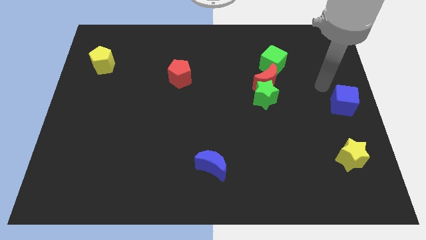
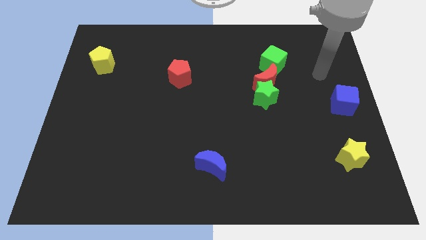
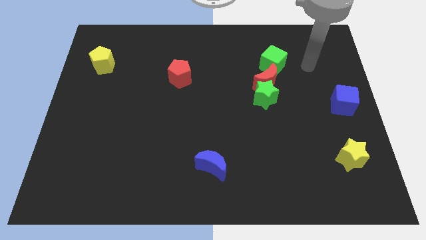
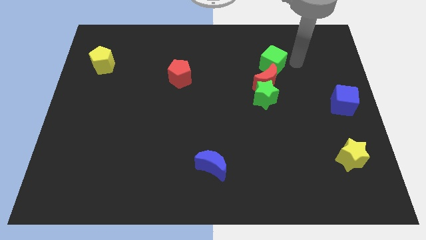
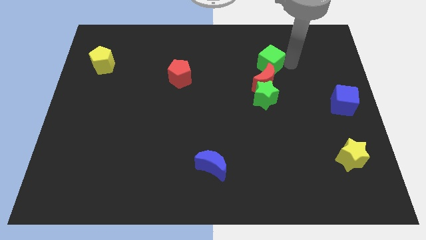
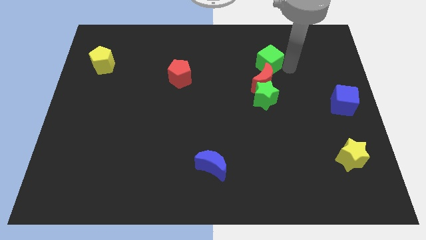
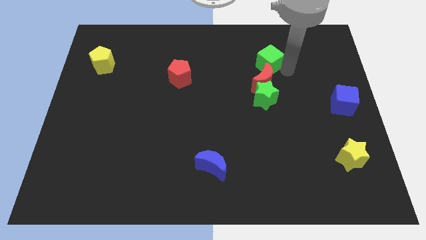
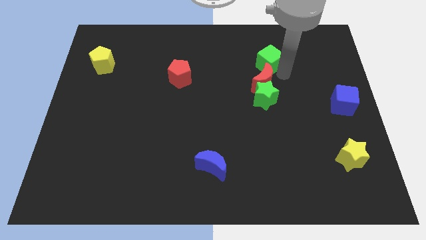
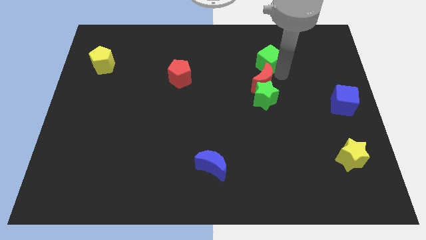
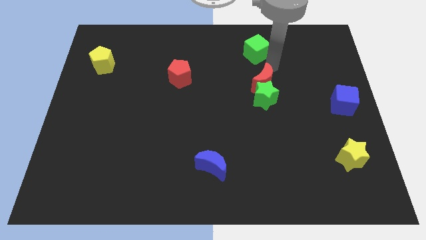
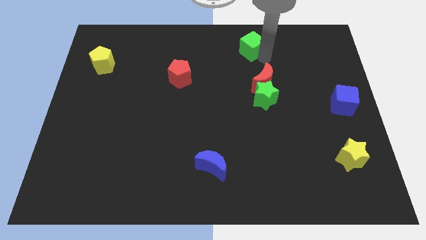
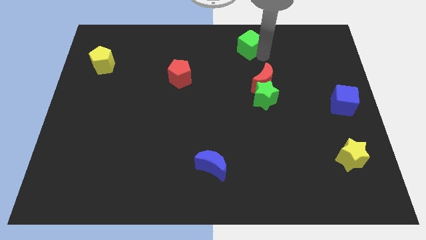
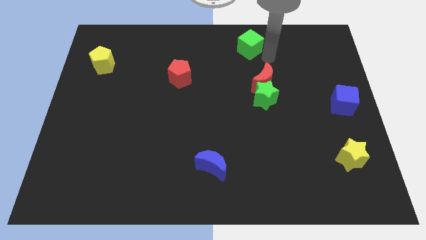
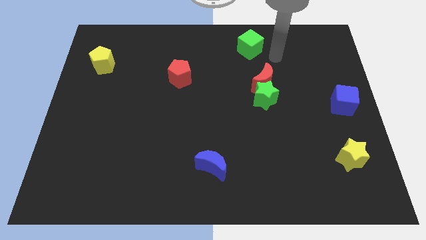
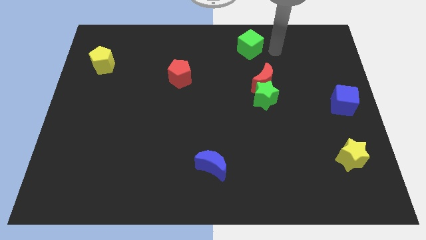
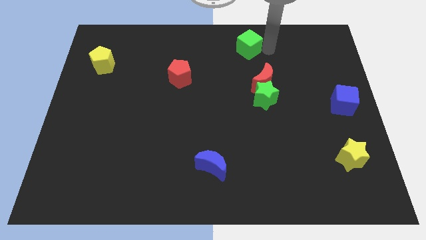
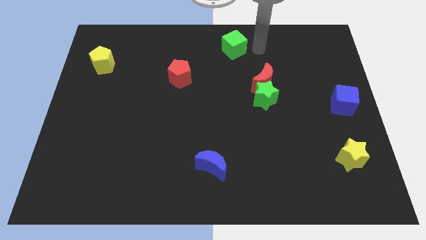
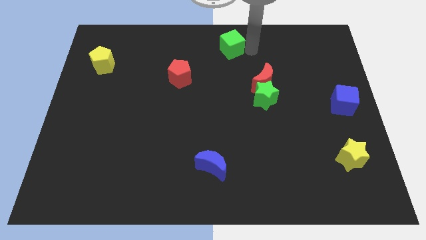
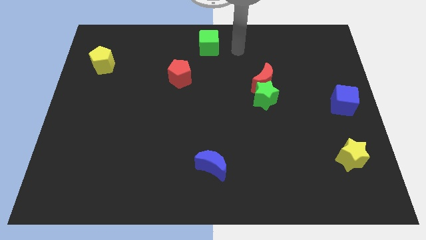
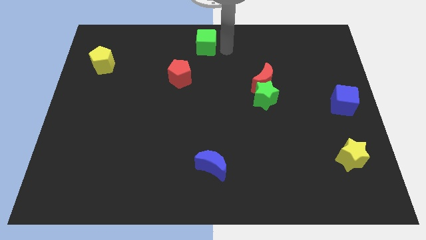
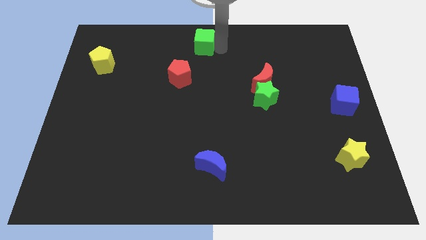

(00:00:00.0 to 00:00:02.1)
move the green cube away from the red crescent

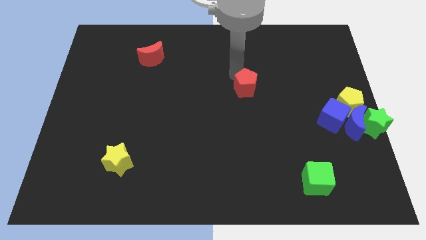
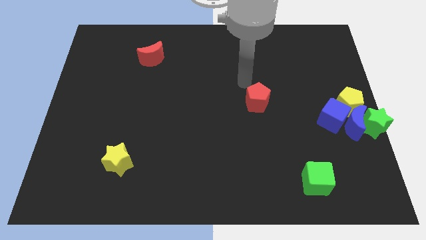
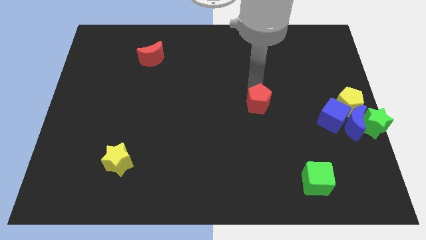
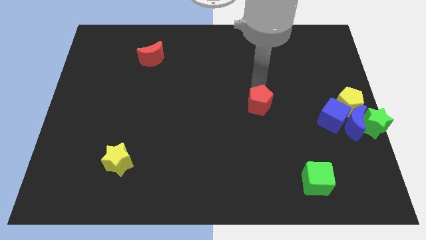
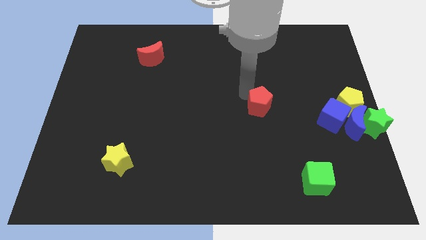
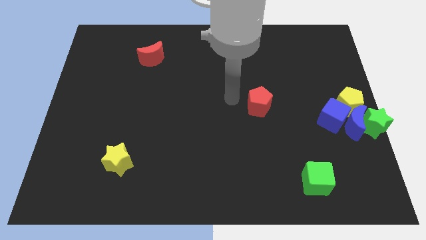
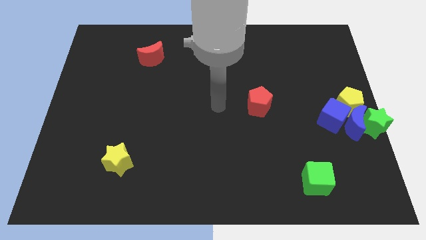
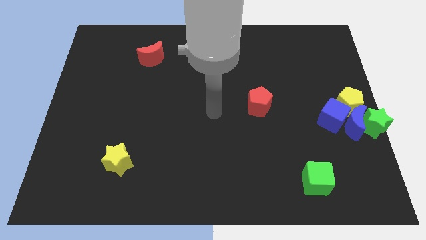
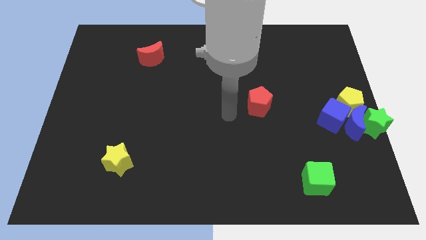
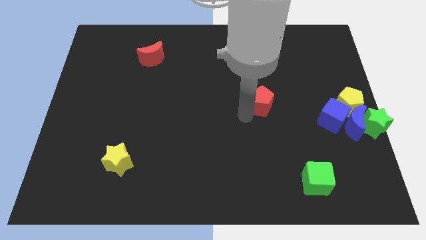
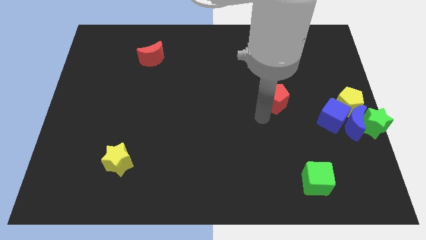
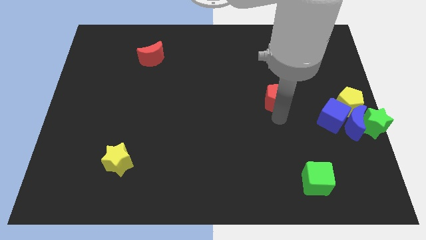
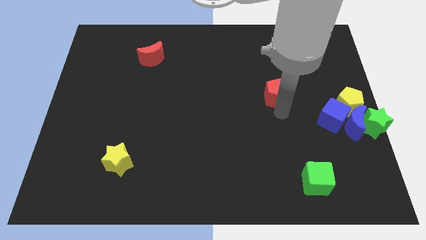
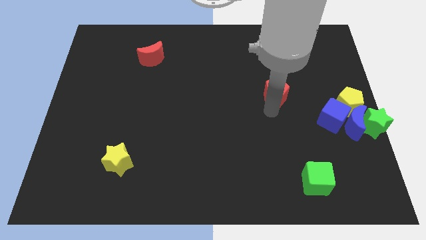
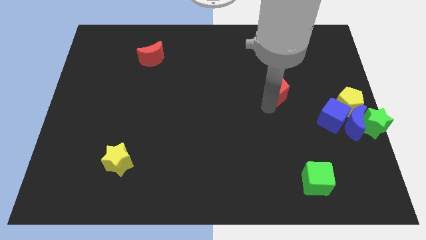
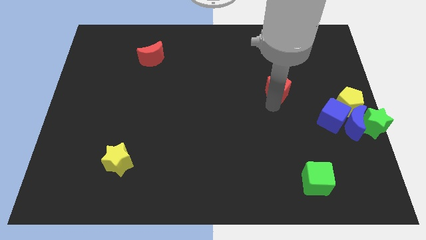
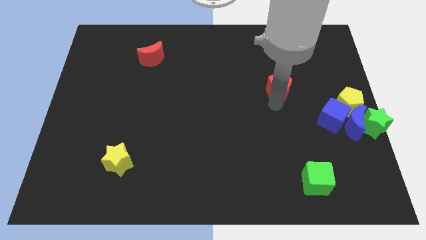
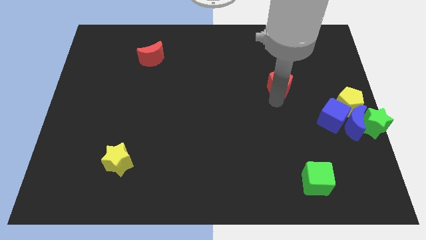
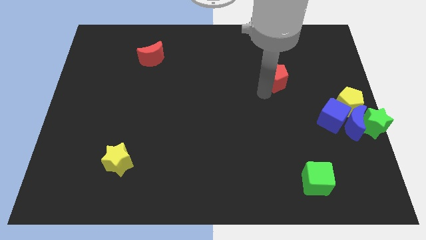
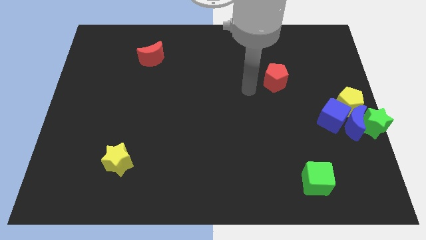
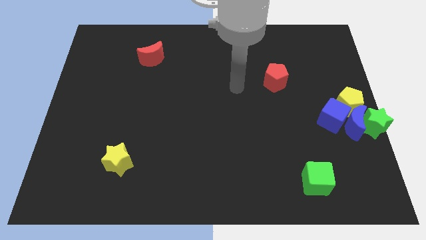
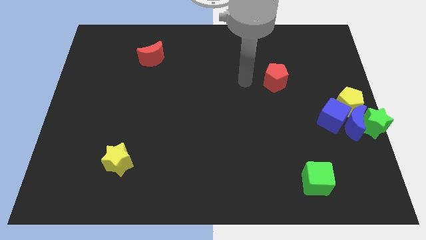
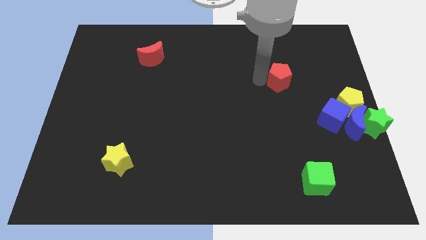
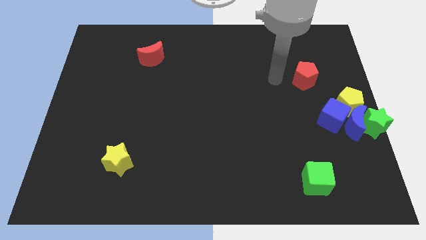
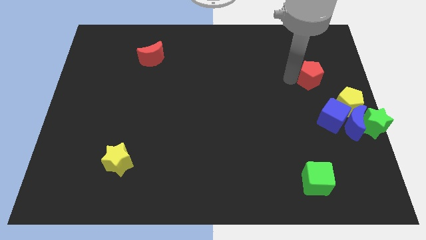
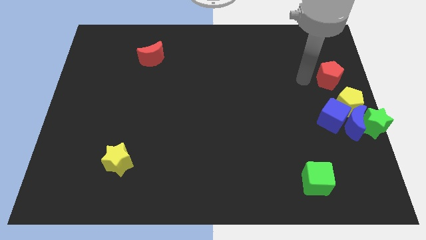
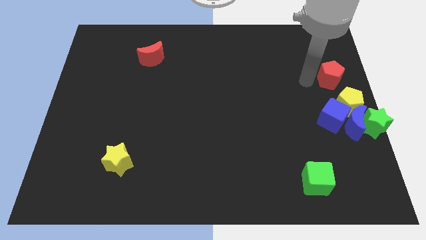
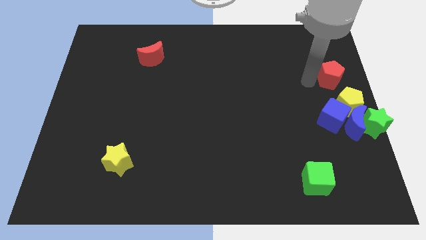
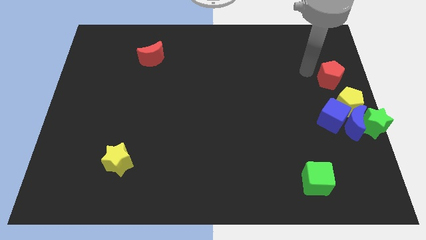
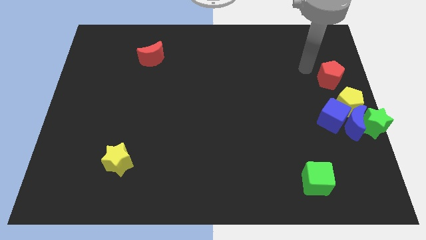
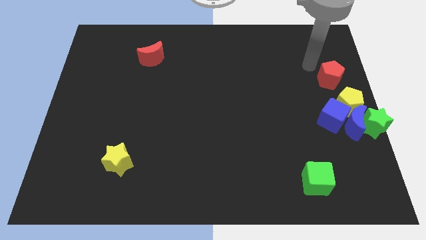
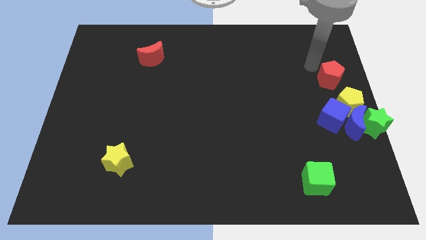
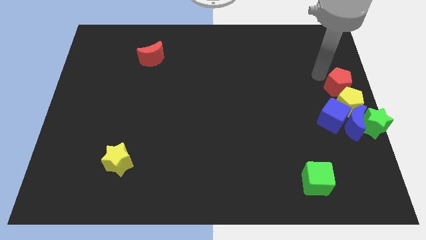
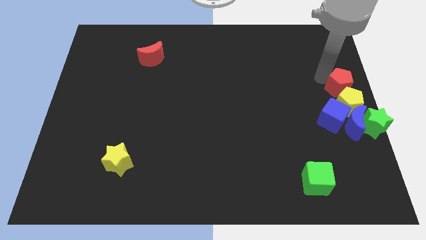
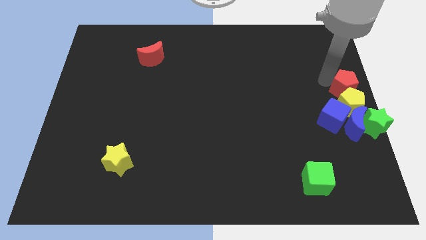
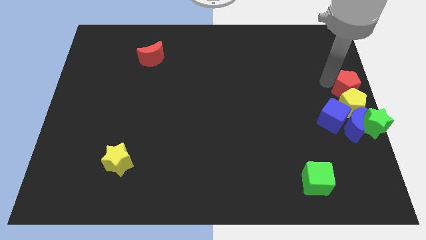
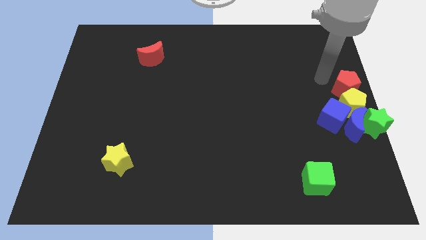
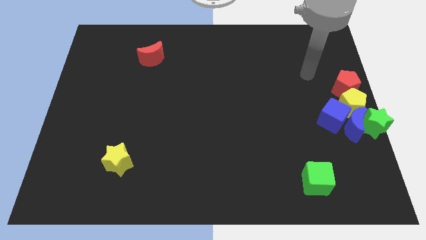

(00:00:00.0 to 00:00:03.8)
push red pentagon above yellow pentagon

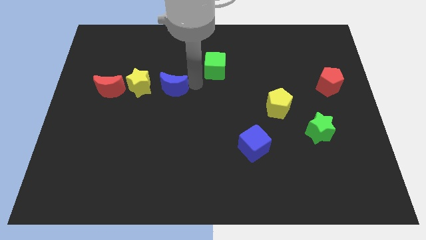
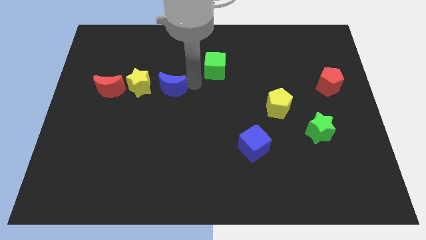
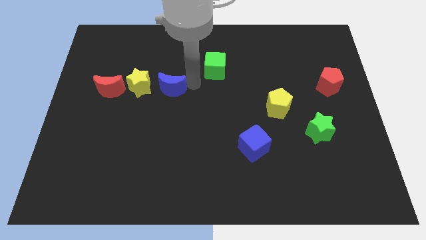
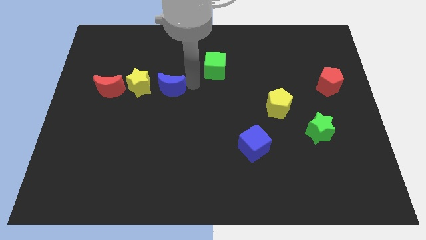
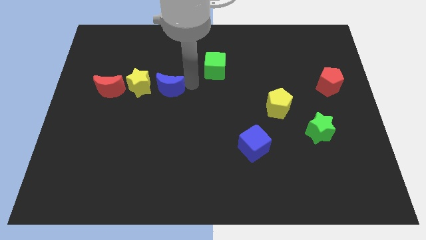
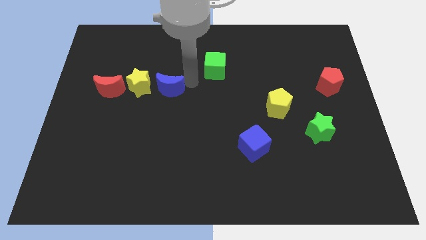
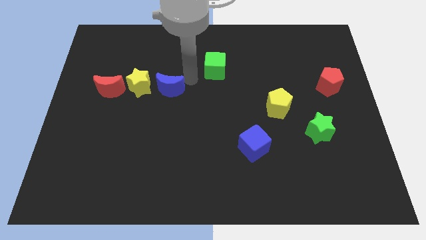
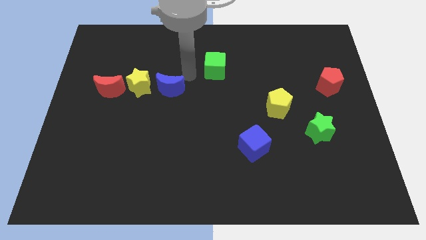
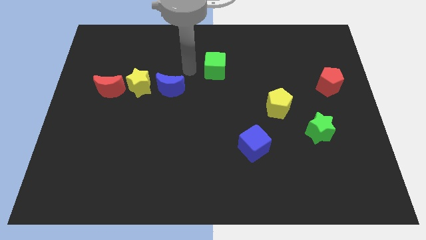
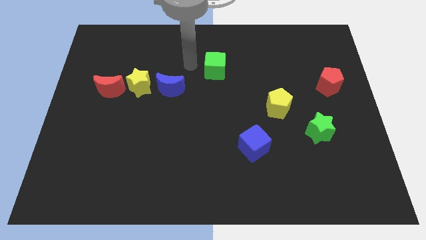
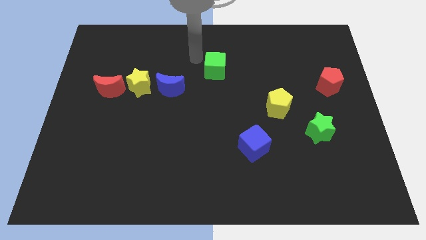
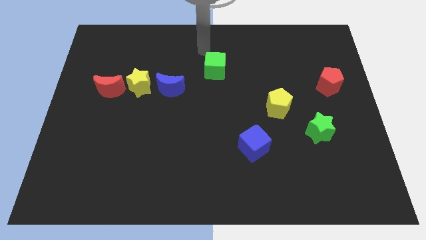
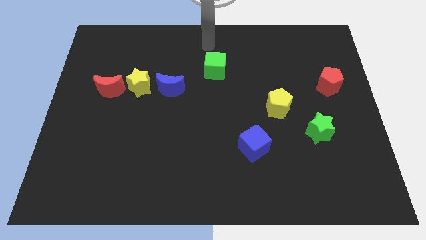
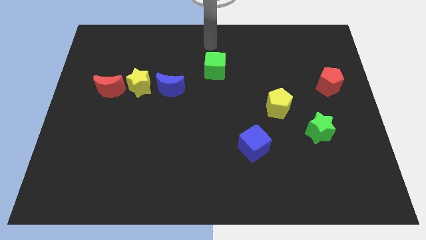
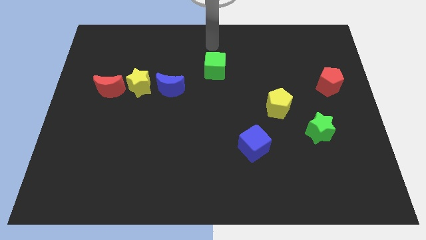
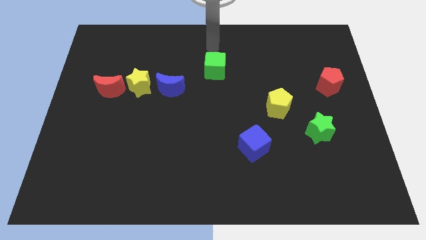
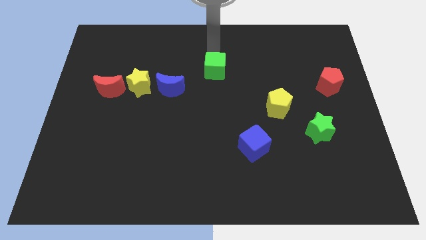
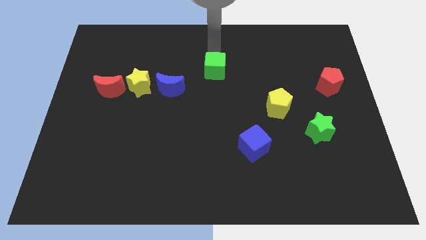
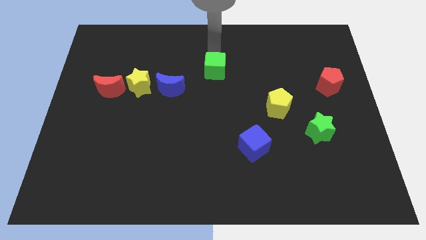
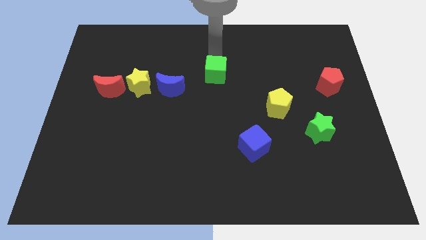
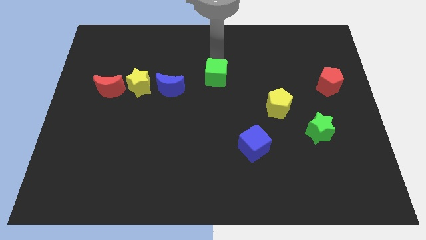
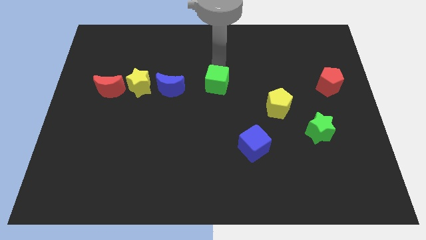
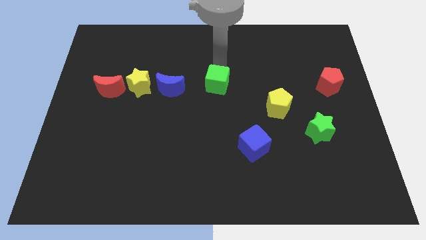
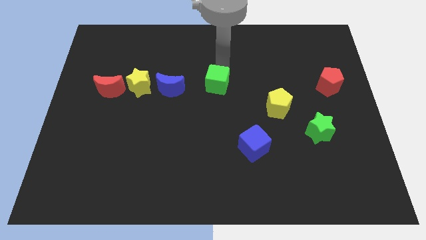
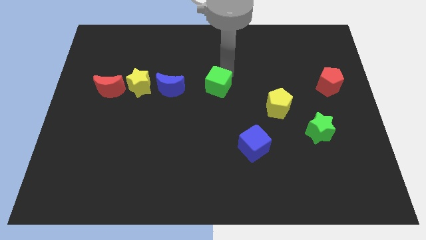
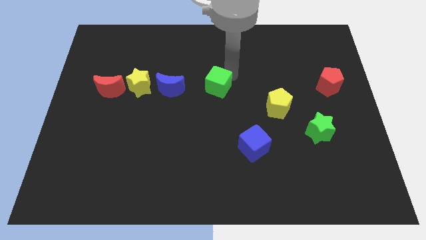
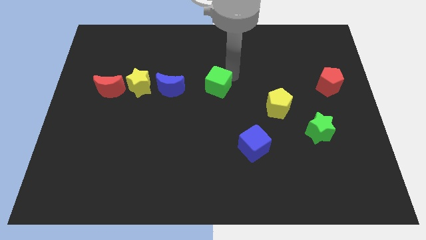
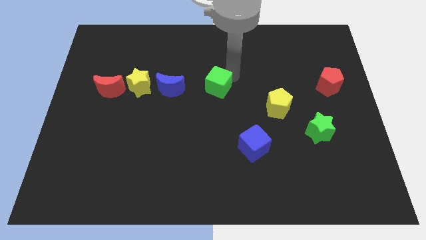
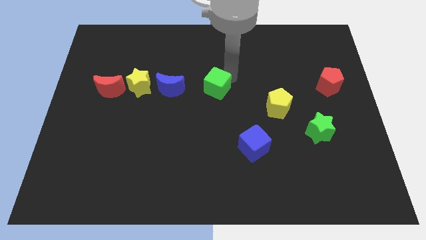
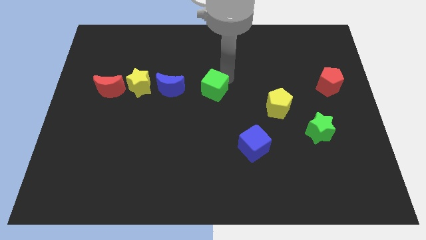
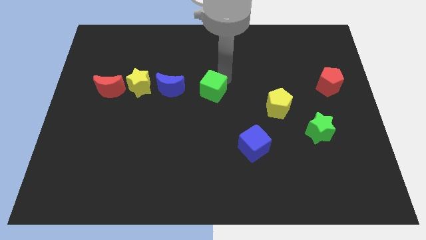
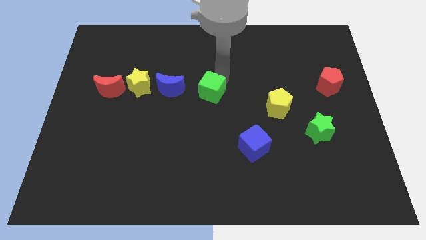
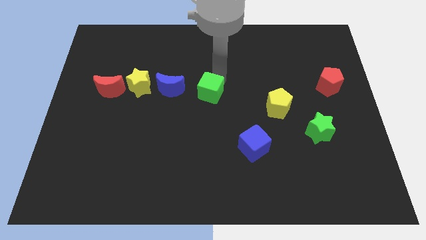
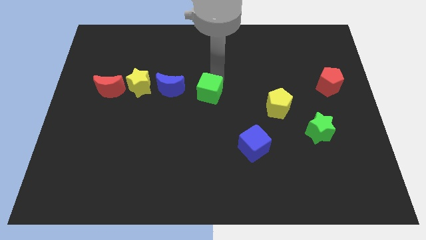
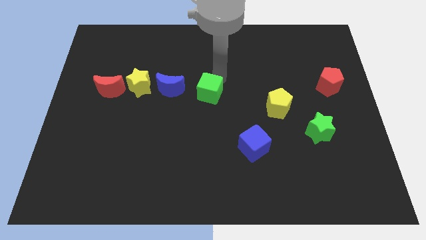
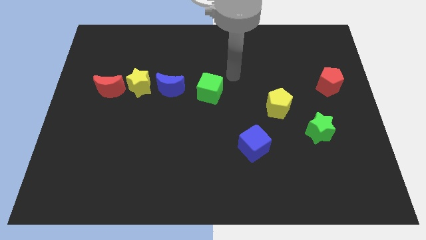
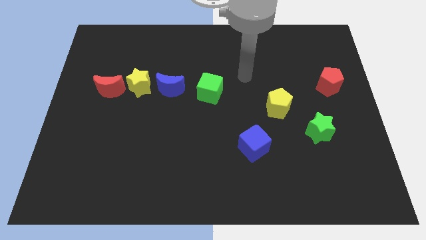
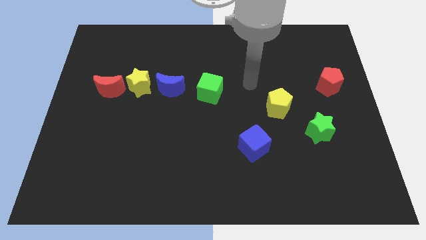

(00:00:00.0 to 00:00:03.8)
move green cube to form a vertical line
